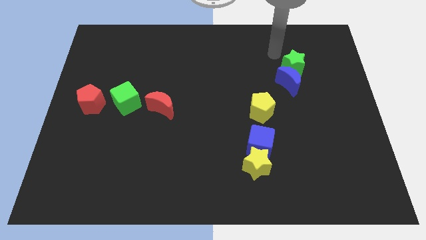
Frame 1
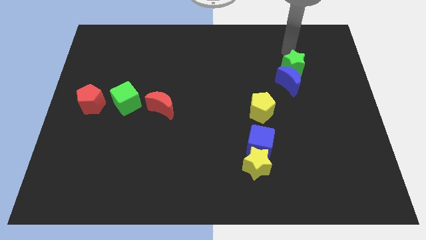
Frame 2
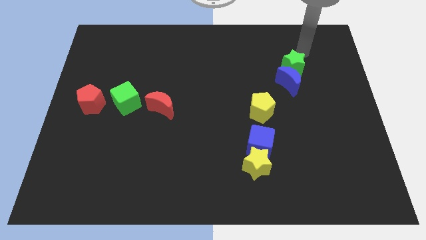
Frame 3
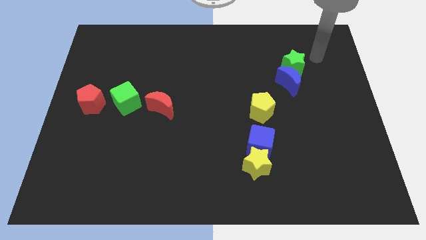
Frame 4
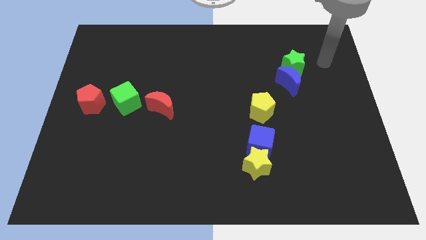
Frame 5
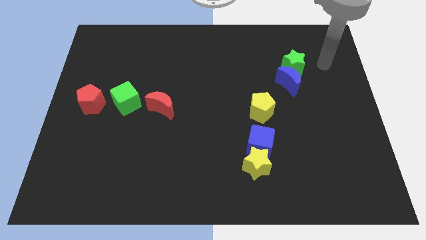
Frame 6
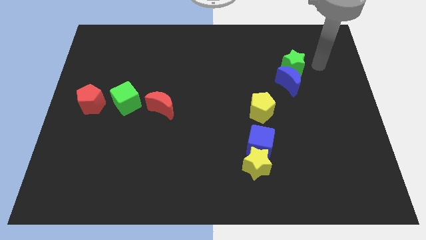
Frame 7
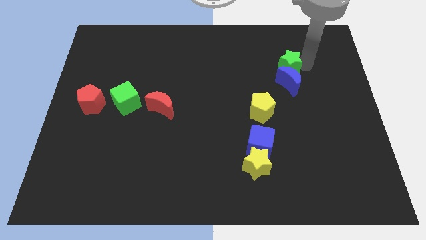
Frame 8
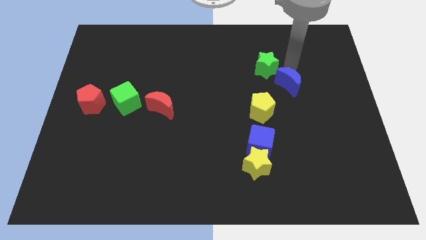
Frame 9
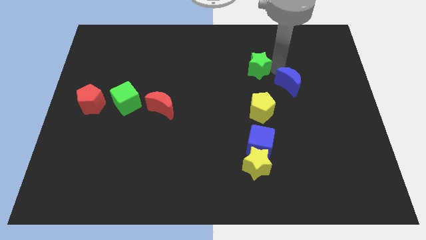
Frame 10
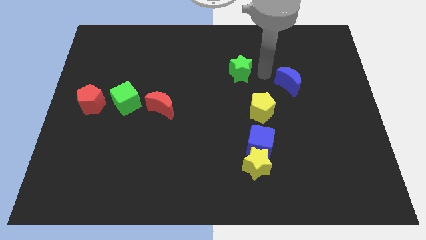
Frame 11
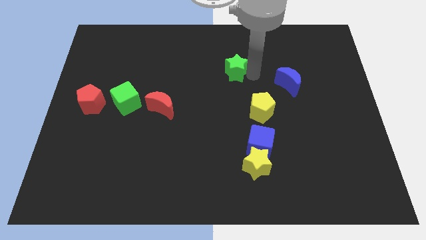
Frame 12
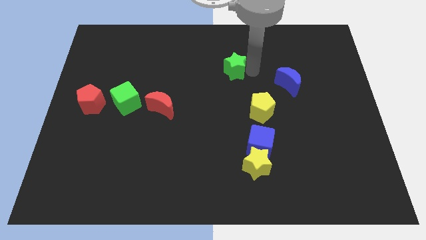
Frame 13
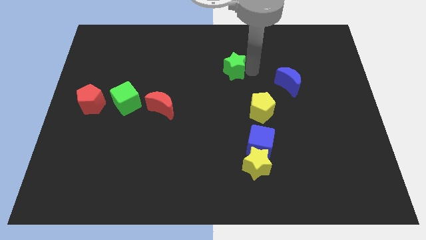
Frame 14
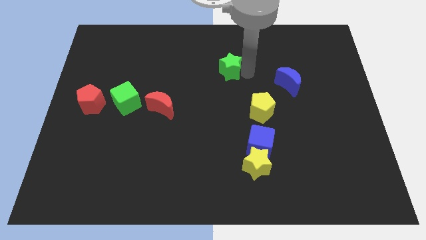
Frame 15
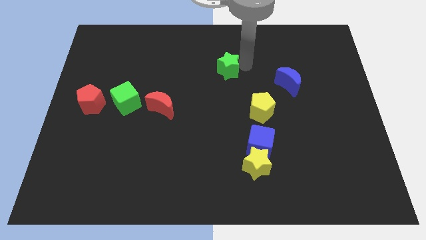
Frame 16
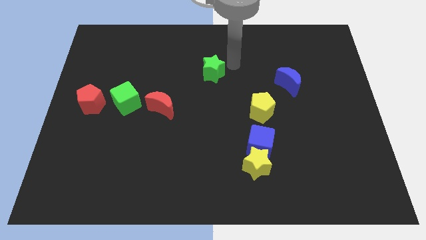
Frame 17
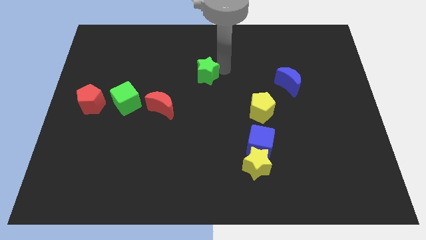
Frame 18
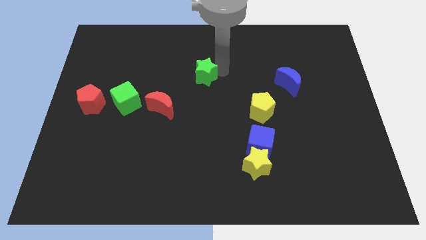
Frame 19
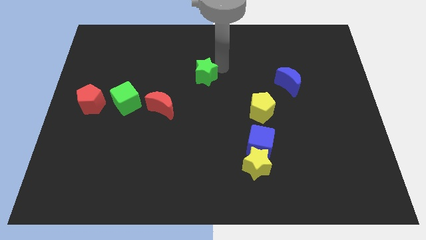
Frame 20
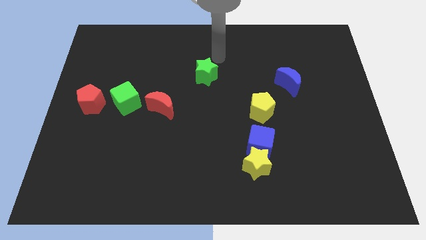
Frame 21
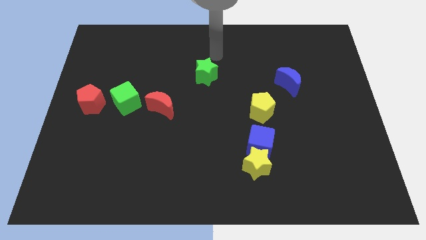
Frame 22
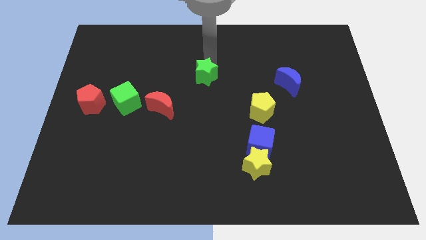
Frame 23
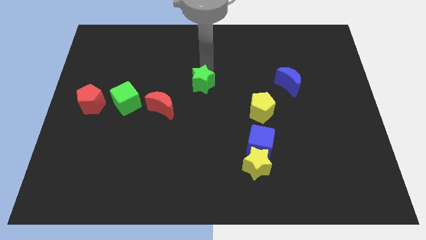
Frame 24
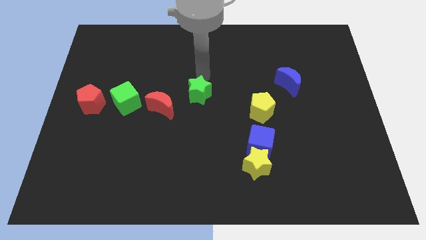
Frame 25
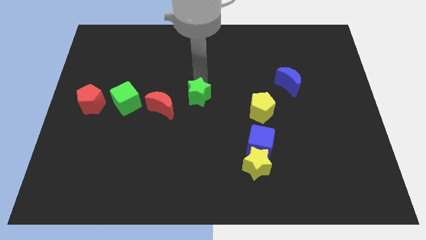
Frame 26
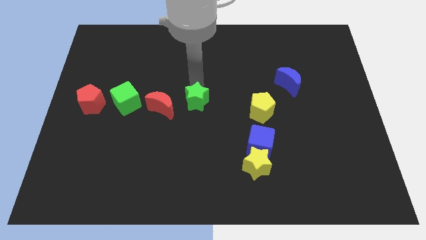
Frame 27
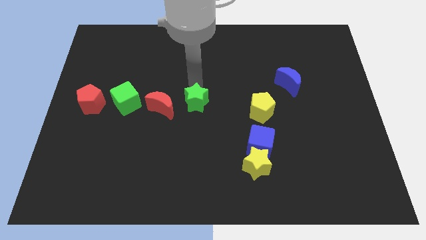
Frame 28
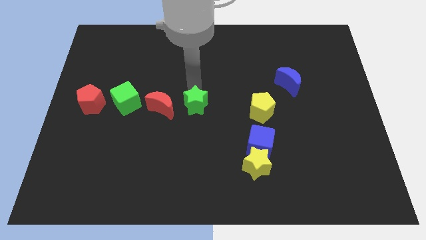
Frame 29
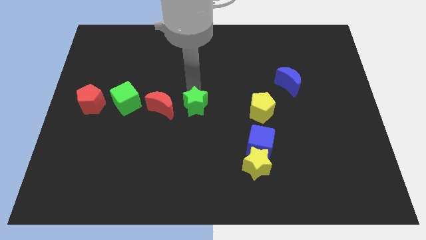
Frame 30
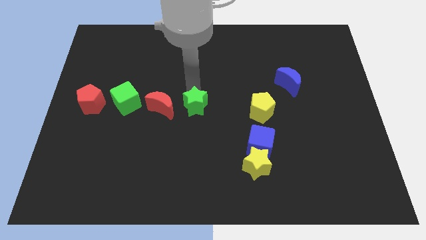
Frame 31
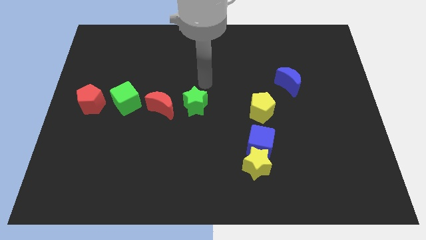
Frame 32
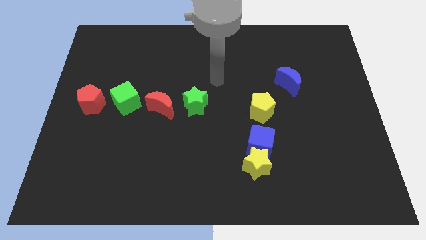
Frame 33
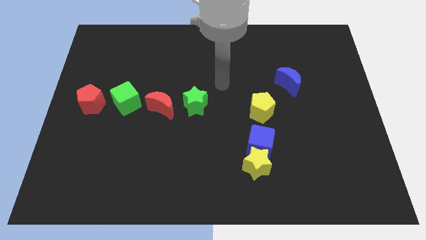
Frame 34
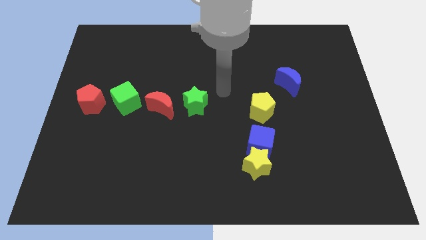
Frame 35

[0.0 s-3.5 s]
push the green star slightly towards the red crescent

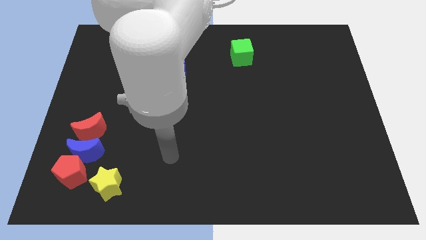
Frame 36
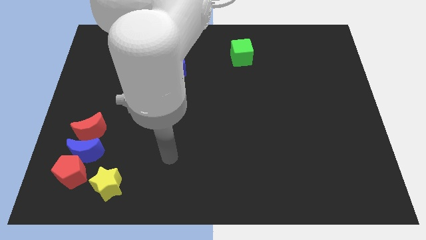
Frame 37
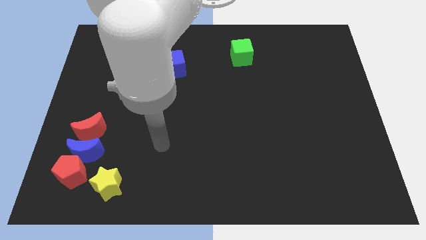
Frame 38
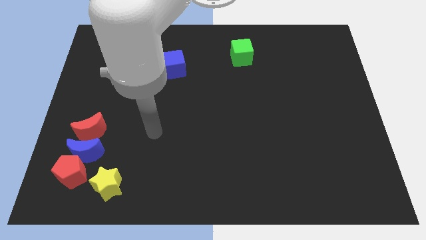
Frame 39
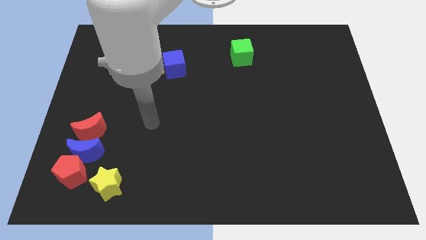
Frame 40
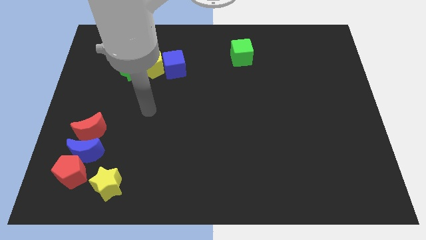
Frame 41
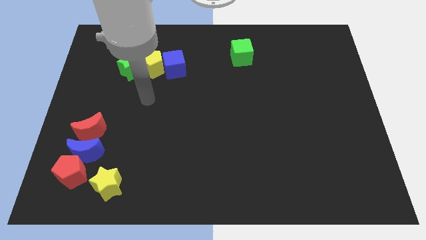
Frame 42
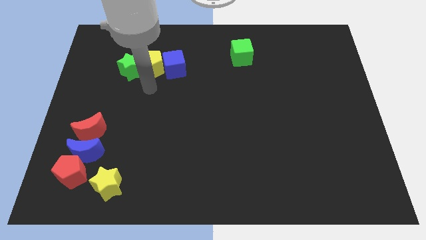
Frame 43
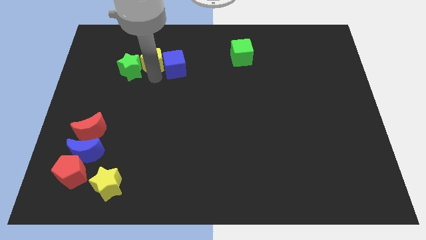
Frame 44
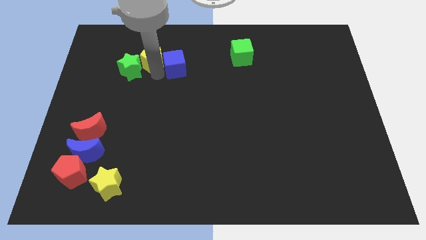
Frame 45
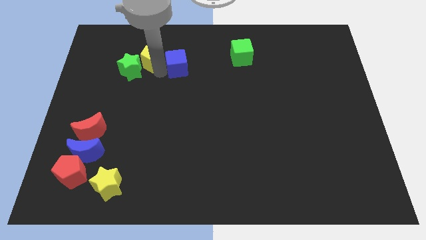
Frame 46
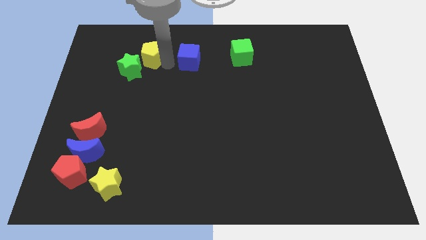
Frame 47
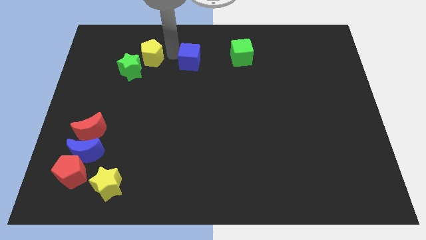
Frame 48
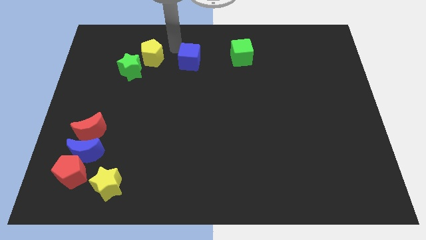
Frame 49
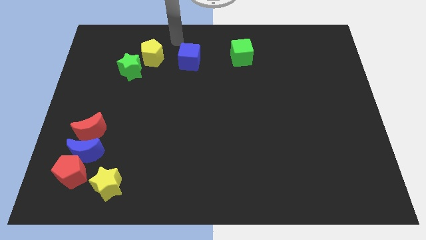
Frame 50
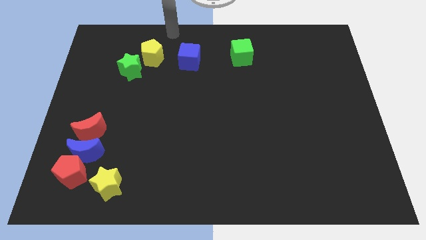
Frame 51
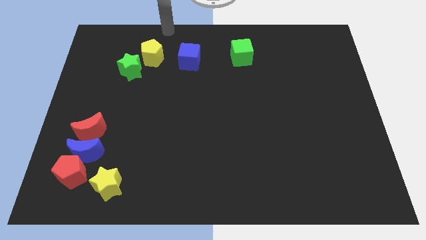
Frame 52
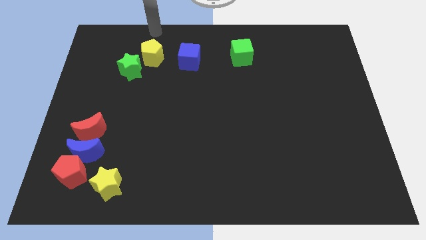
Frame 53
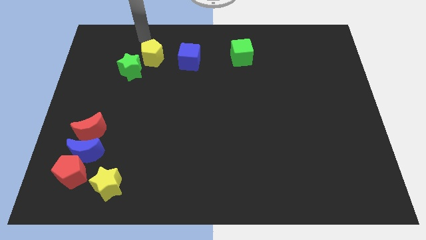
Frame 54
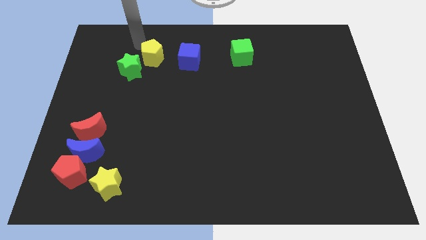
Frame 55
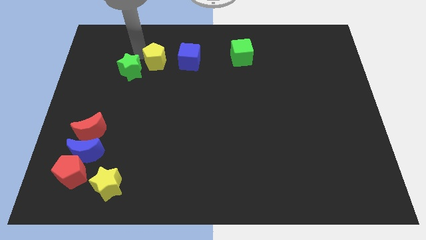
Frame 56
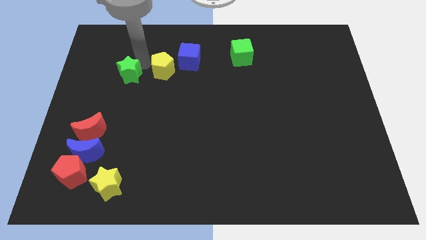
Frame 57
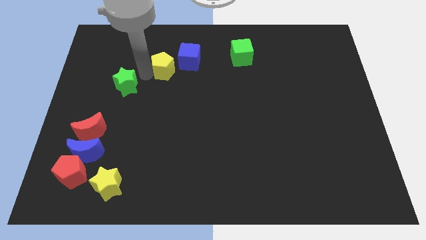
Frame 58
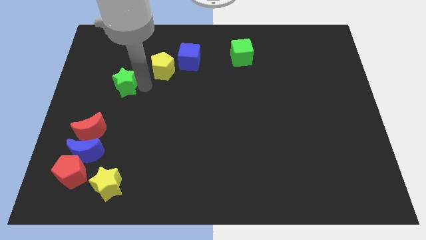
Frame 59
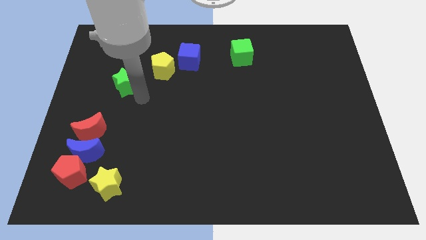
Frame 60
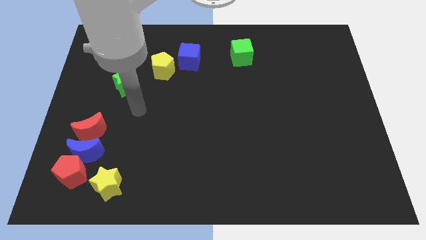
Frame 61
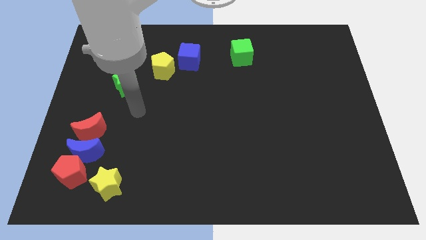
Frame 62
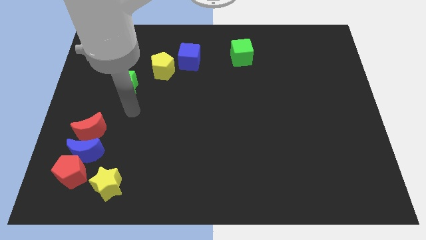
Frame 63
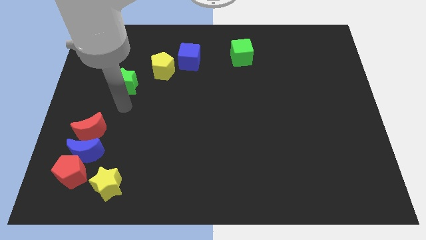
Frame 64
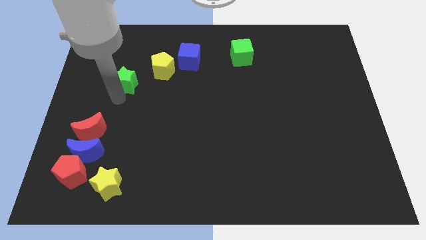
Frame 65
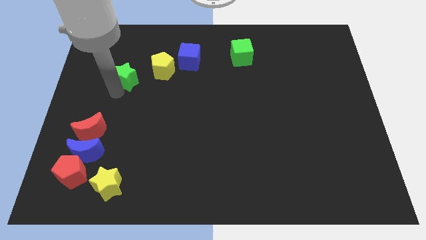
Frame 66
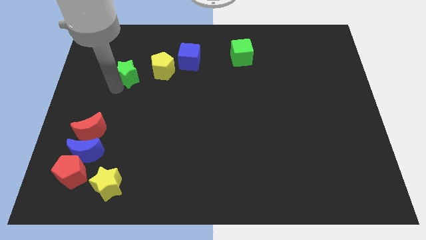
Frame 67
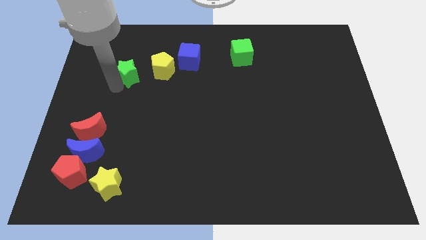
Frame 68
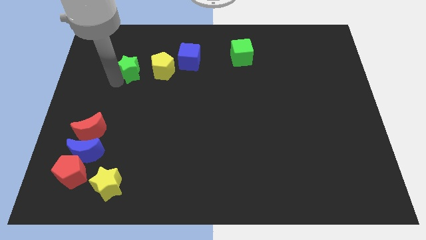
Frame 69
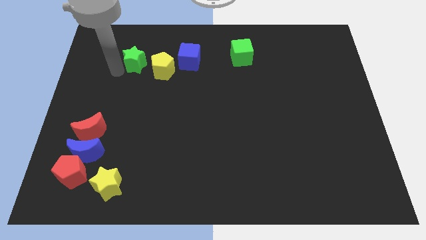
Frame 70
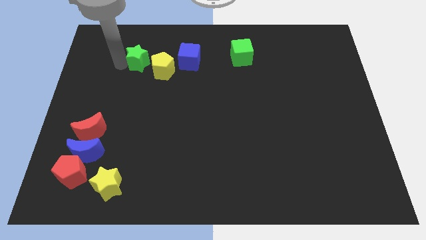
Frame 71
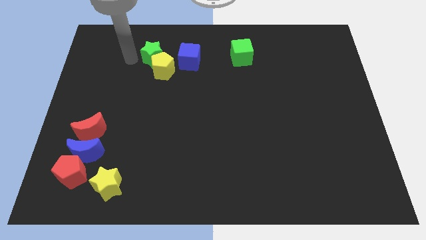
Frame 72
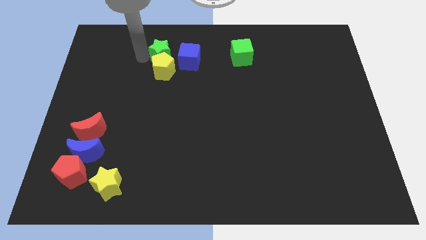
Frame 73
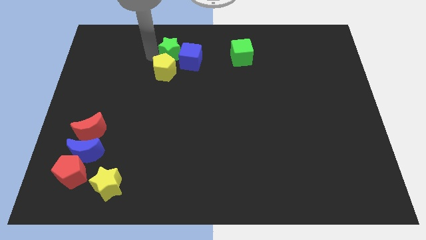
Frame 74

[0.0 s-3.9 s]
make a triangle using green staryellow pentagon and blue cube

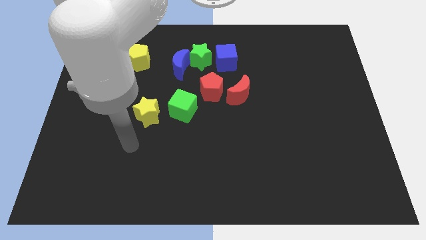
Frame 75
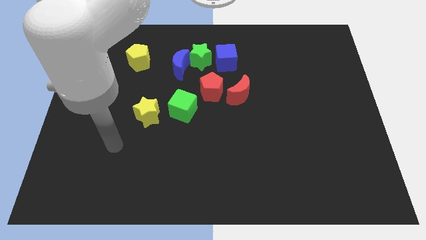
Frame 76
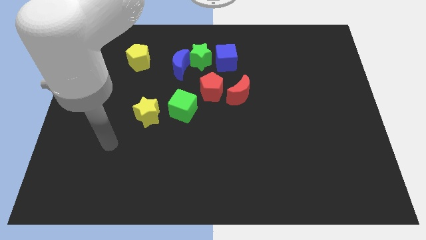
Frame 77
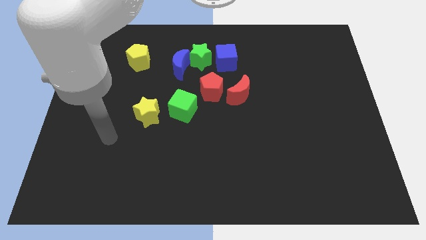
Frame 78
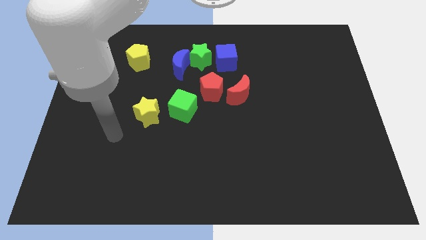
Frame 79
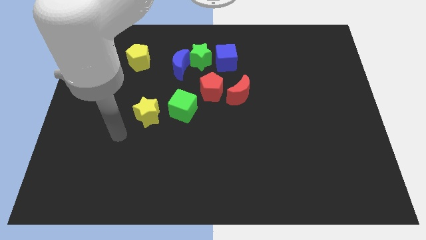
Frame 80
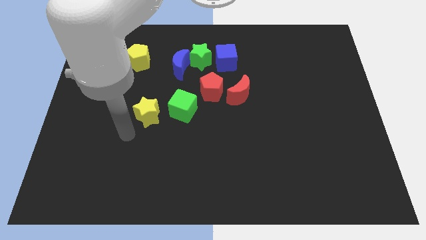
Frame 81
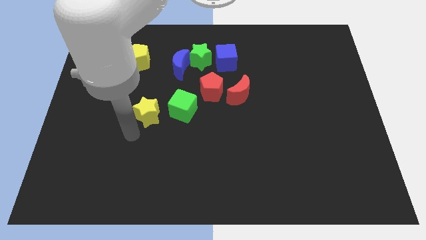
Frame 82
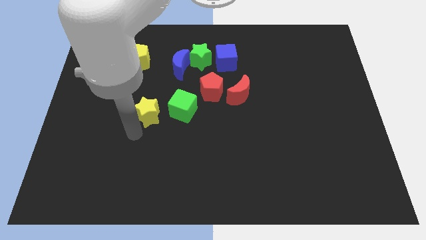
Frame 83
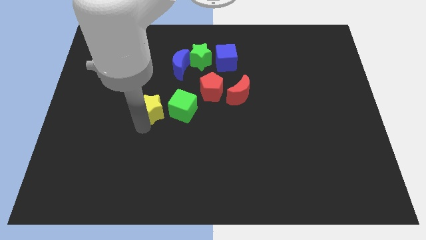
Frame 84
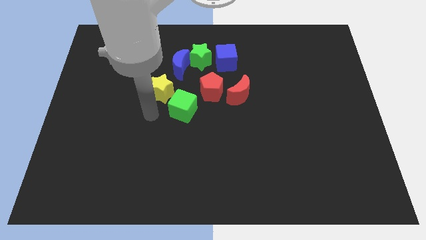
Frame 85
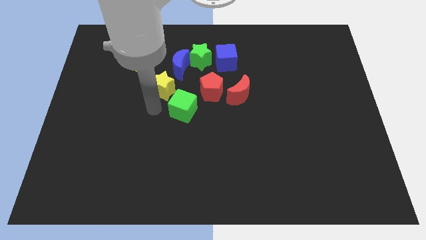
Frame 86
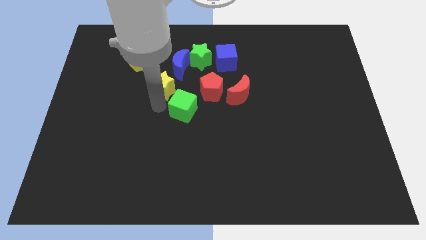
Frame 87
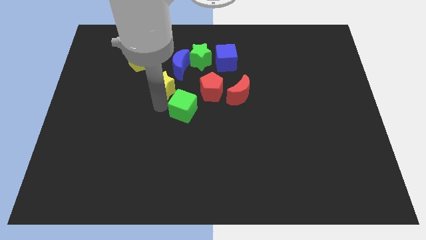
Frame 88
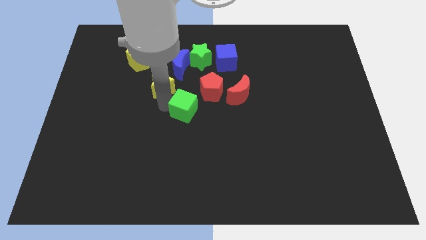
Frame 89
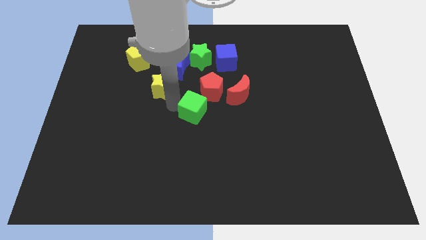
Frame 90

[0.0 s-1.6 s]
push the yellow star towards the blue crescent
